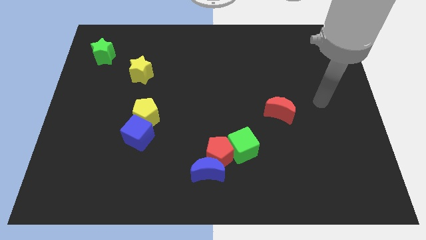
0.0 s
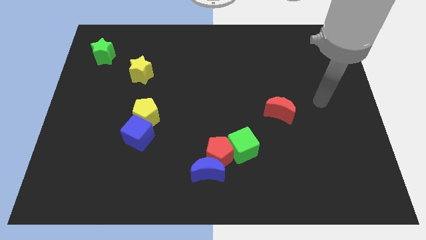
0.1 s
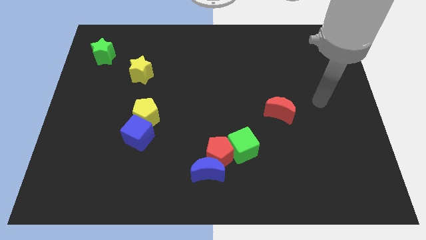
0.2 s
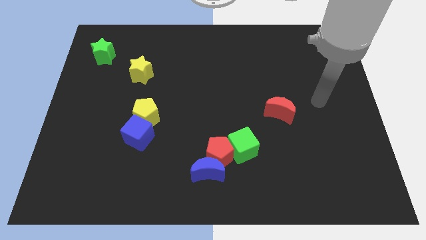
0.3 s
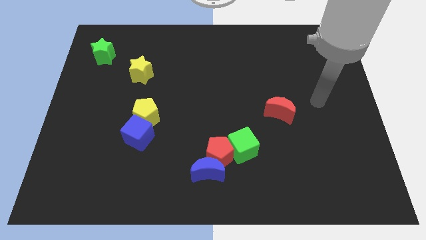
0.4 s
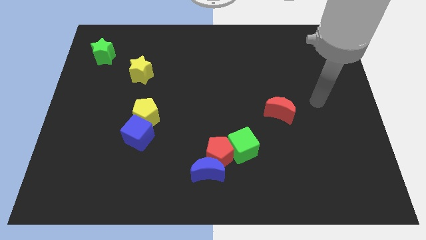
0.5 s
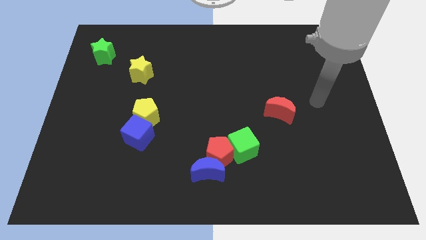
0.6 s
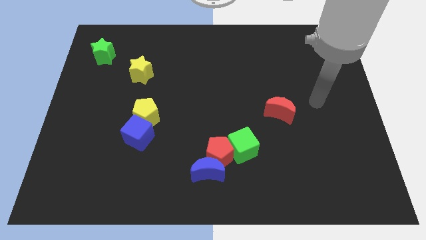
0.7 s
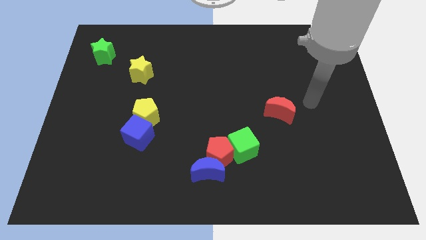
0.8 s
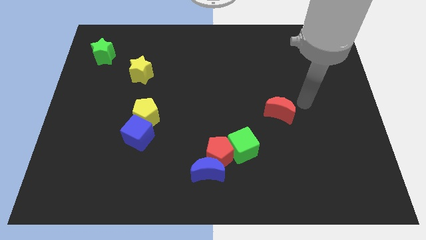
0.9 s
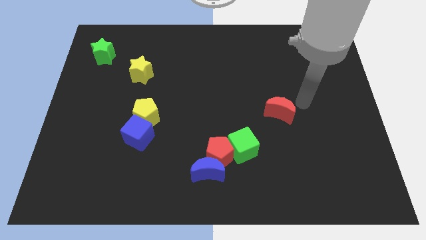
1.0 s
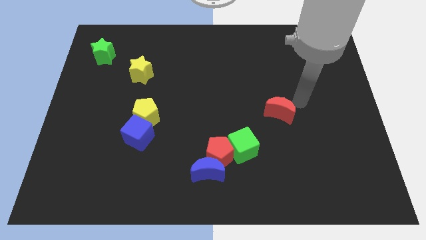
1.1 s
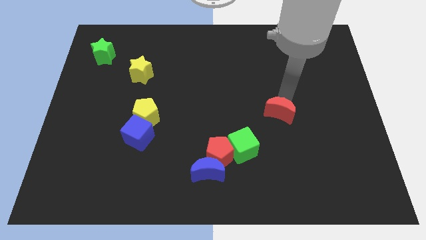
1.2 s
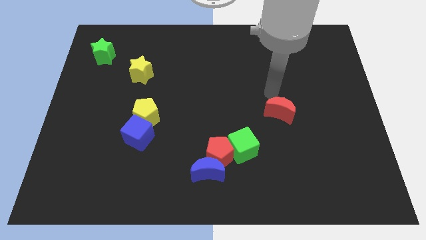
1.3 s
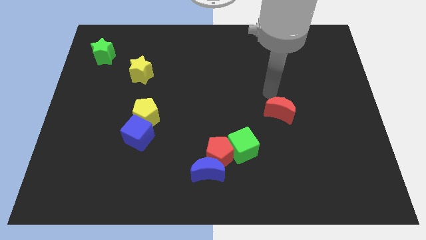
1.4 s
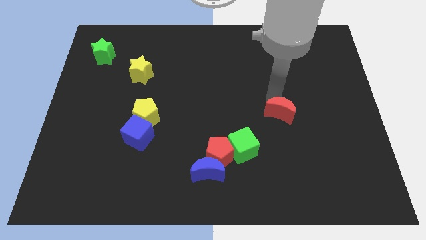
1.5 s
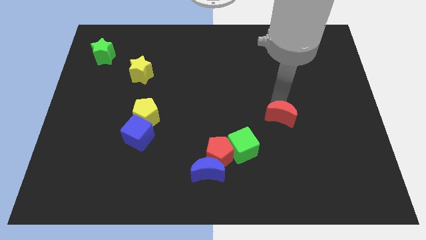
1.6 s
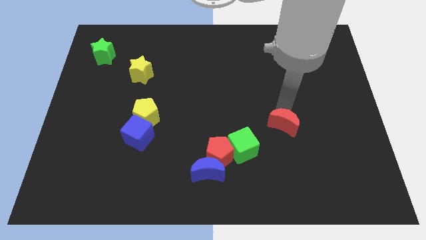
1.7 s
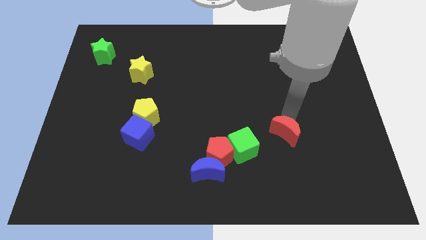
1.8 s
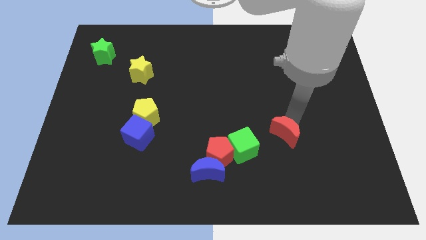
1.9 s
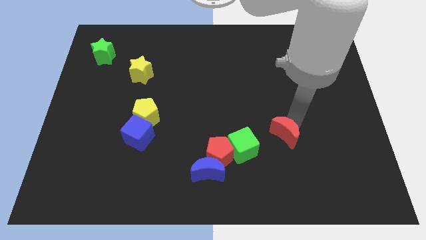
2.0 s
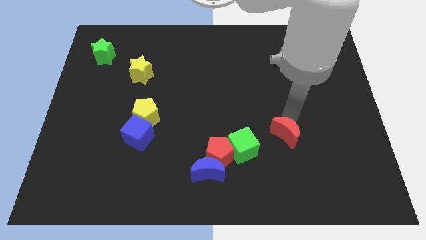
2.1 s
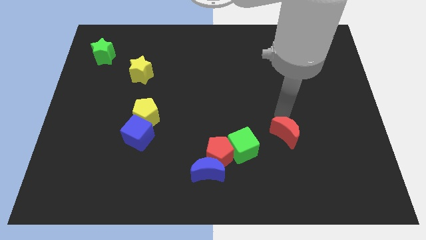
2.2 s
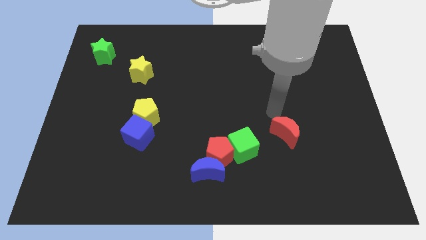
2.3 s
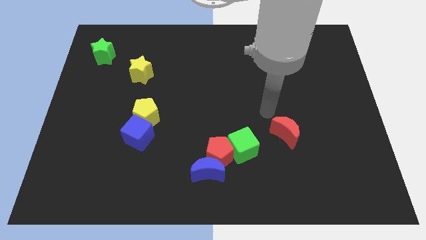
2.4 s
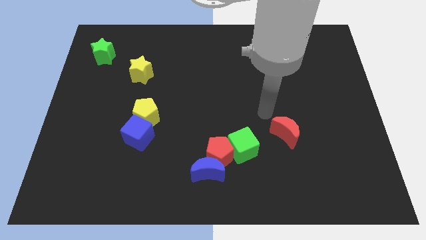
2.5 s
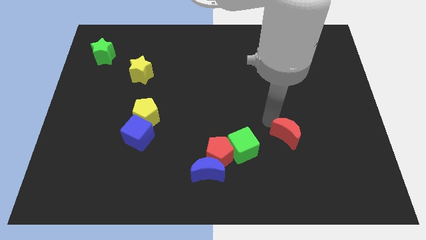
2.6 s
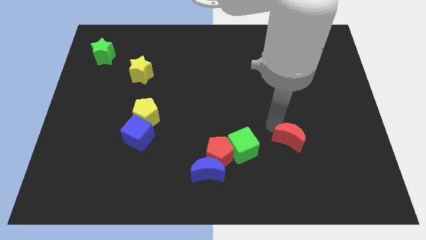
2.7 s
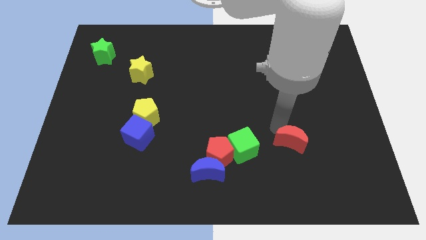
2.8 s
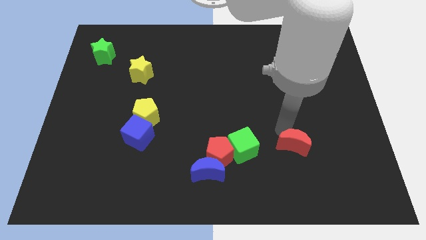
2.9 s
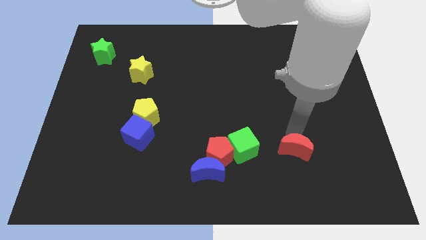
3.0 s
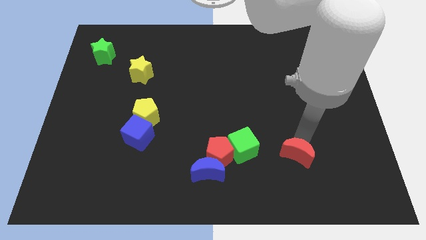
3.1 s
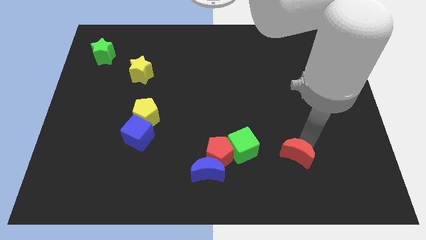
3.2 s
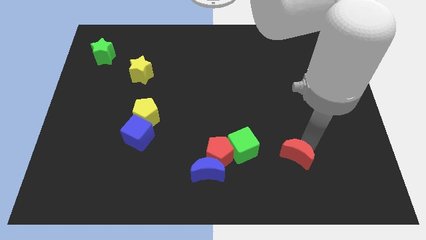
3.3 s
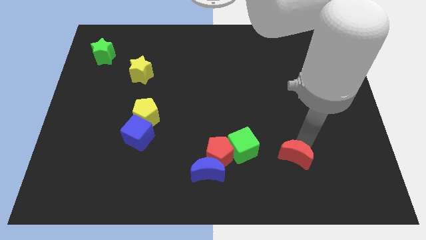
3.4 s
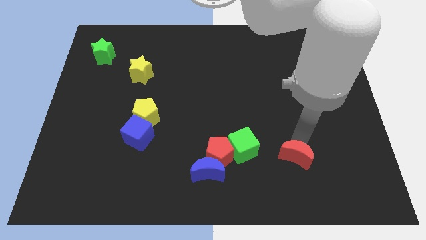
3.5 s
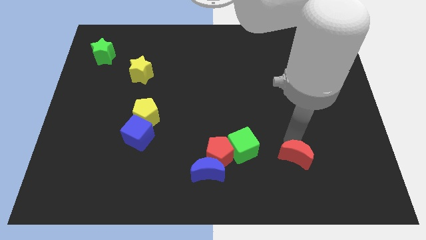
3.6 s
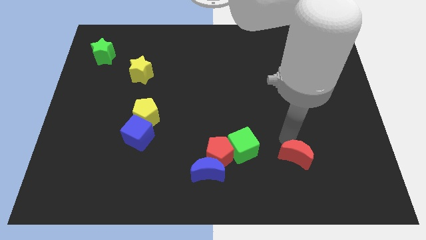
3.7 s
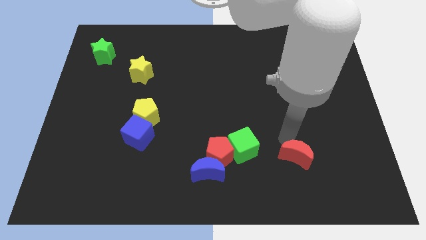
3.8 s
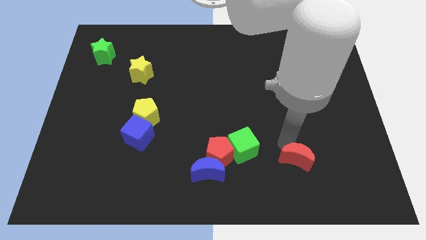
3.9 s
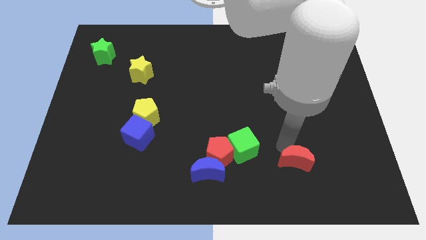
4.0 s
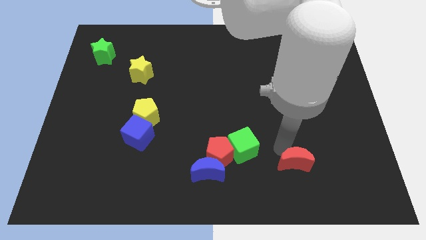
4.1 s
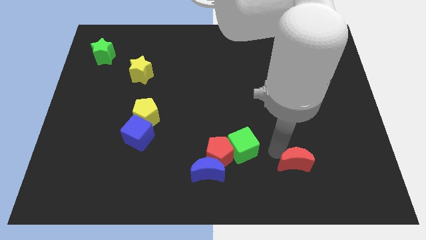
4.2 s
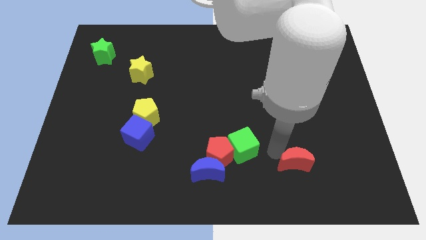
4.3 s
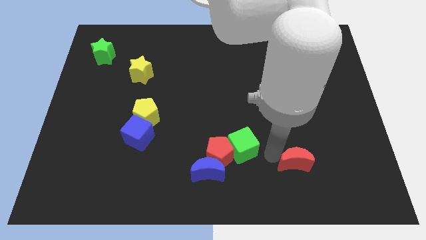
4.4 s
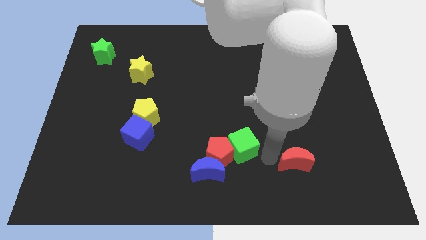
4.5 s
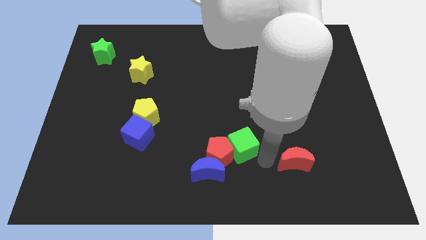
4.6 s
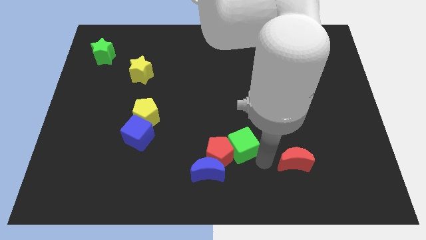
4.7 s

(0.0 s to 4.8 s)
move the red crescent towards the right of the green cube

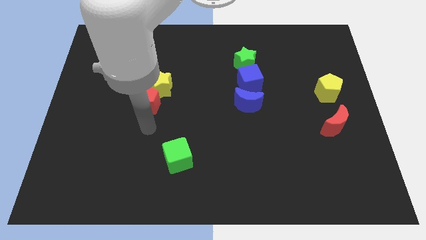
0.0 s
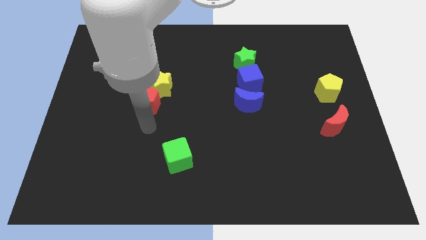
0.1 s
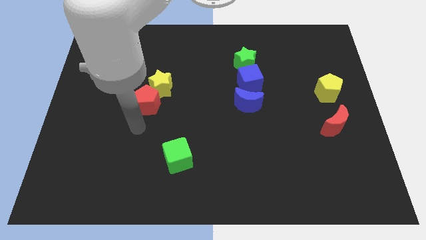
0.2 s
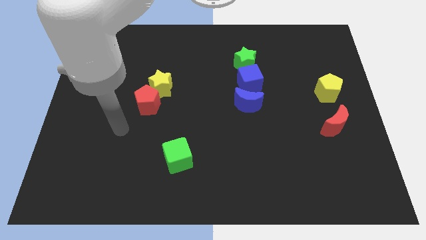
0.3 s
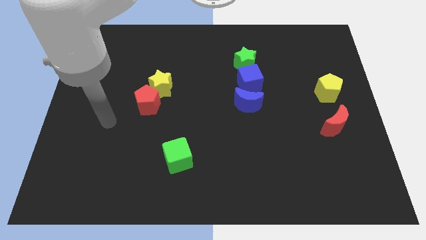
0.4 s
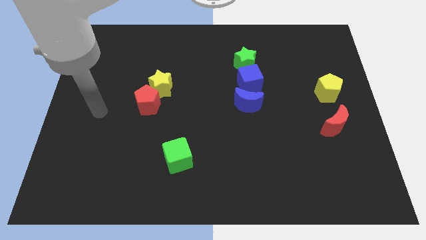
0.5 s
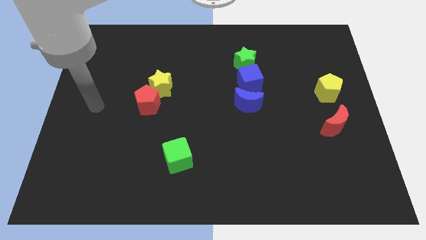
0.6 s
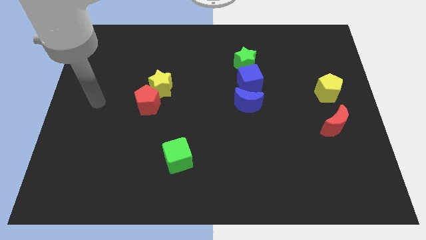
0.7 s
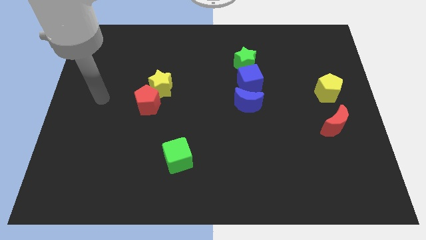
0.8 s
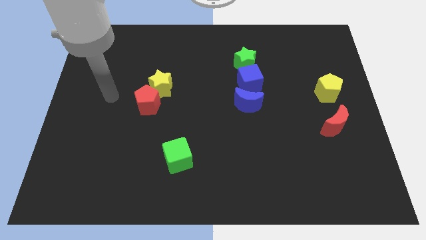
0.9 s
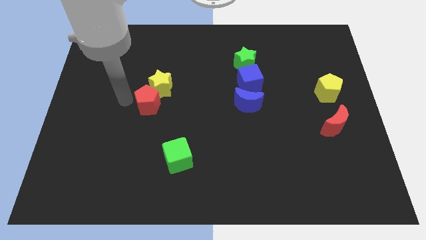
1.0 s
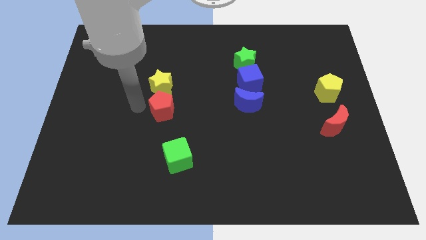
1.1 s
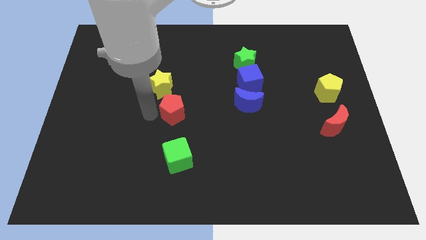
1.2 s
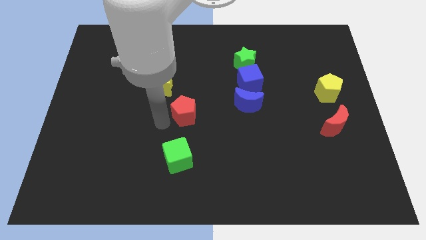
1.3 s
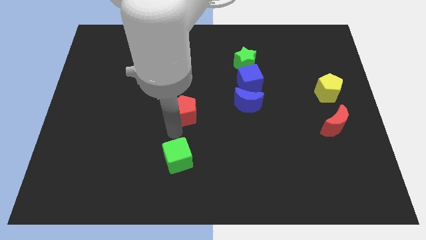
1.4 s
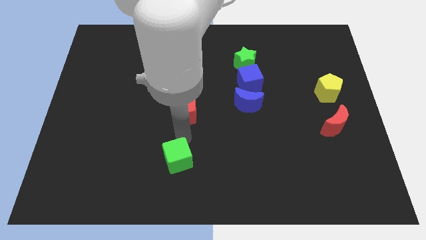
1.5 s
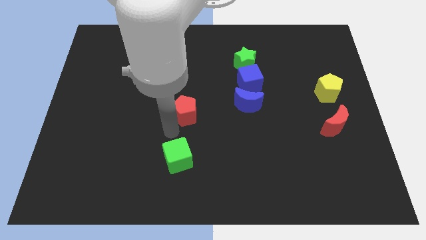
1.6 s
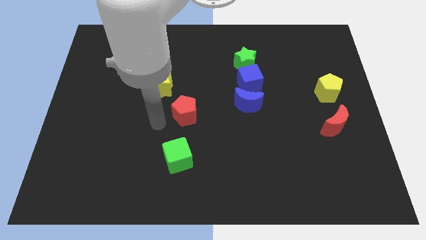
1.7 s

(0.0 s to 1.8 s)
place the red pentagon above the green cube

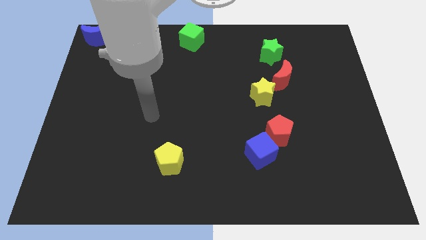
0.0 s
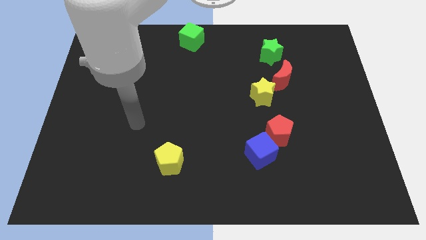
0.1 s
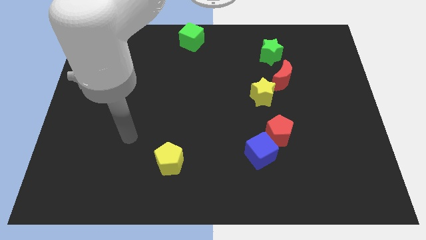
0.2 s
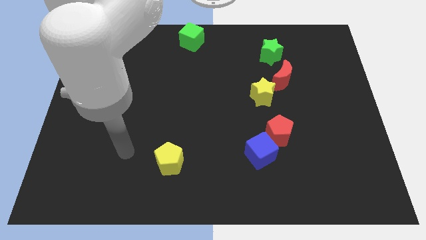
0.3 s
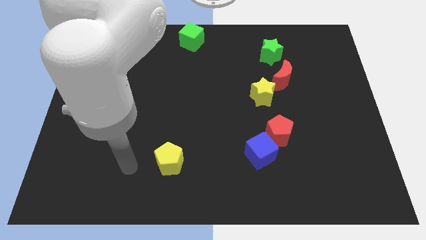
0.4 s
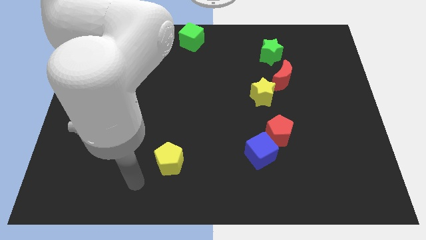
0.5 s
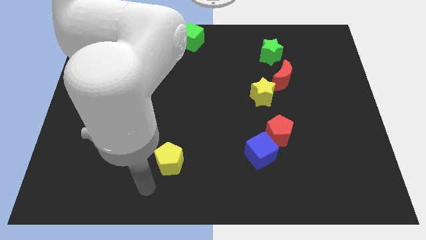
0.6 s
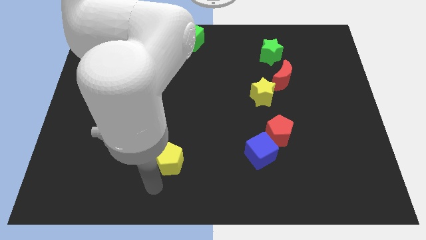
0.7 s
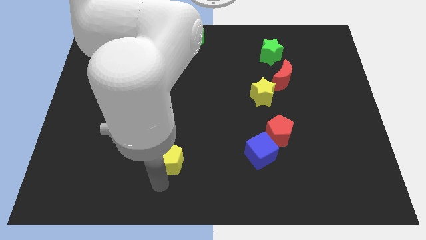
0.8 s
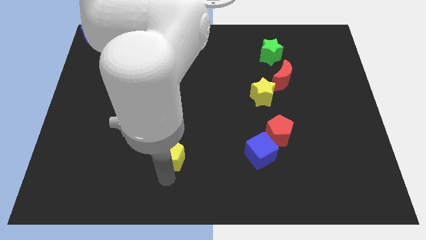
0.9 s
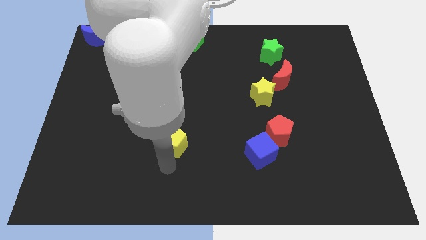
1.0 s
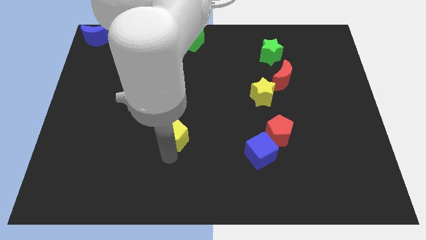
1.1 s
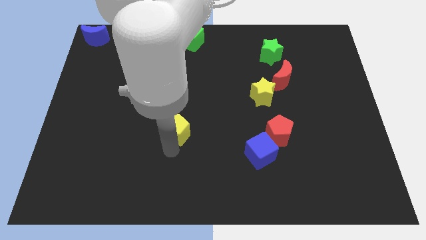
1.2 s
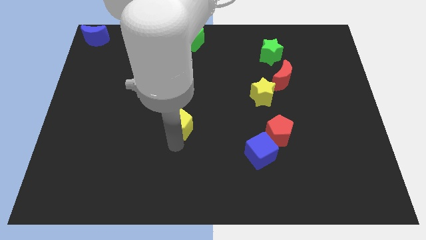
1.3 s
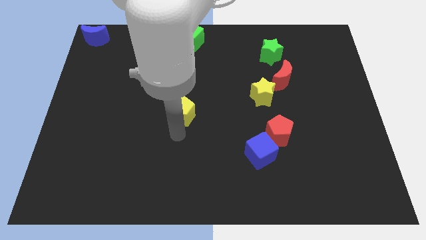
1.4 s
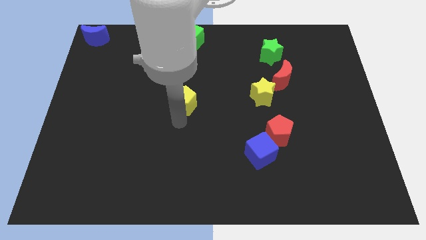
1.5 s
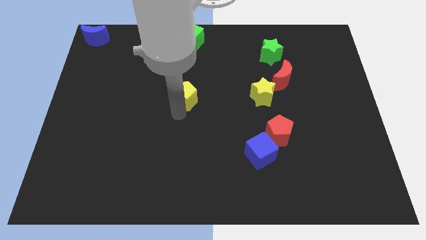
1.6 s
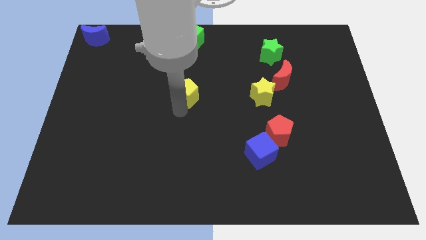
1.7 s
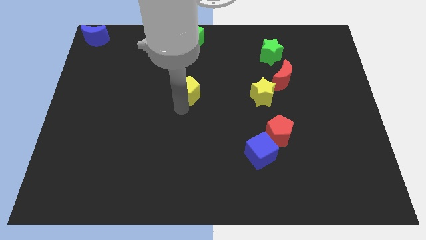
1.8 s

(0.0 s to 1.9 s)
place yellow pentagon to the left of yellow star

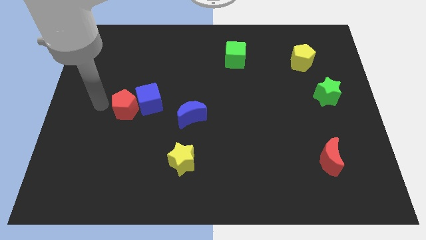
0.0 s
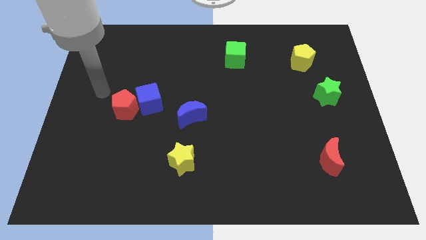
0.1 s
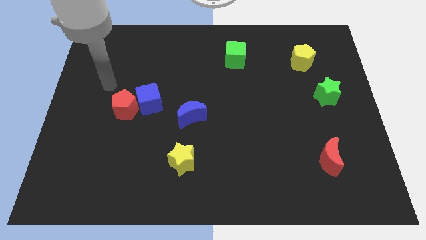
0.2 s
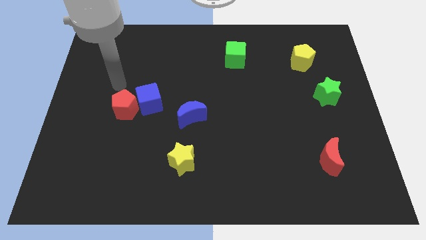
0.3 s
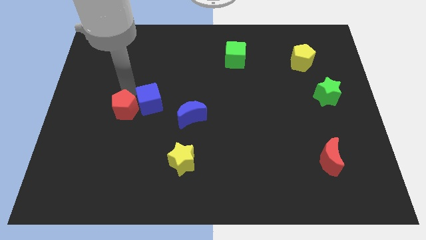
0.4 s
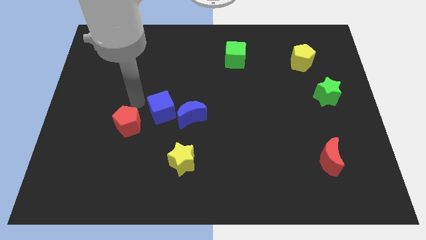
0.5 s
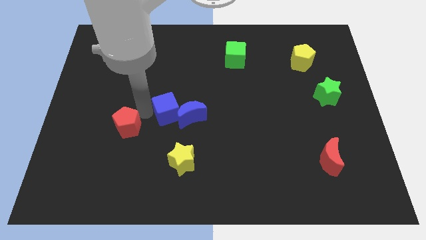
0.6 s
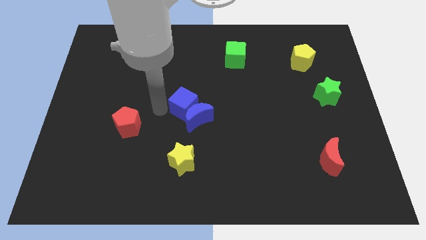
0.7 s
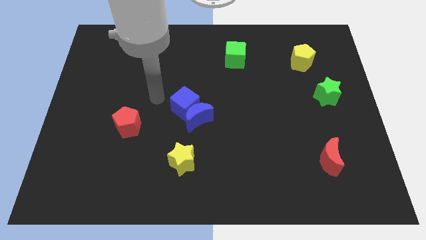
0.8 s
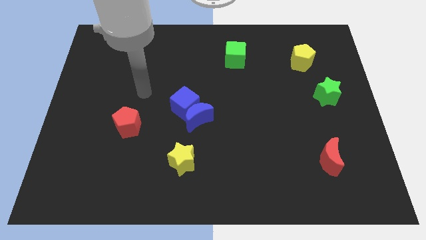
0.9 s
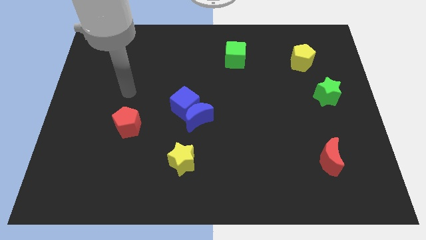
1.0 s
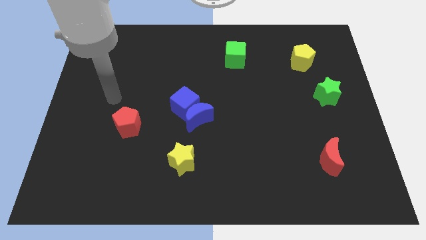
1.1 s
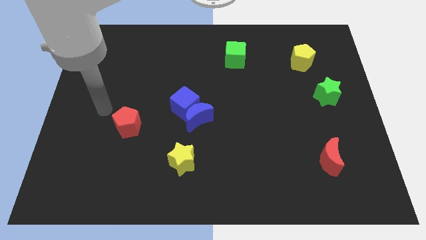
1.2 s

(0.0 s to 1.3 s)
push the blue cube to the top of the blue crescent
